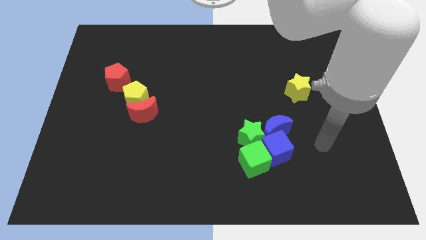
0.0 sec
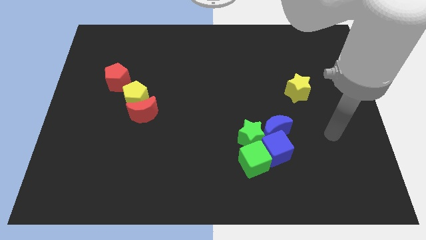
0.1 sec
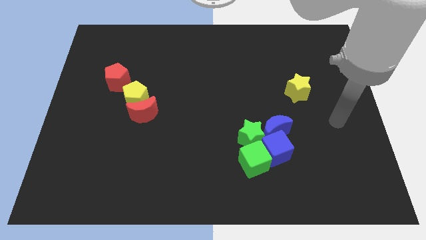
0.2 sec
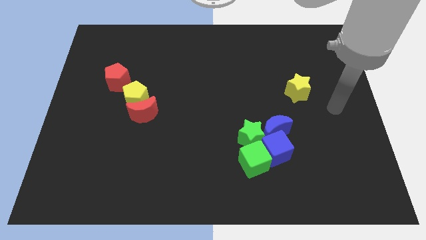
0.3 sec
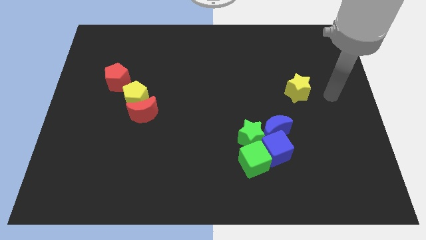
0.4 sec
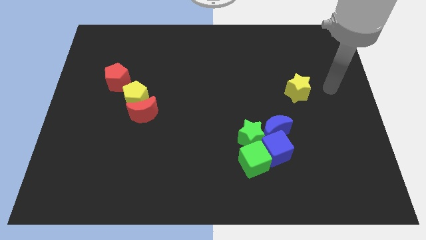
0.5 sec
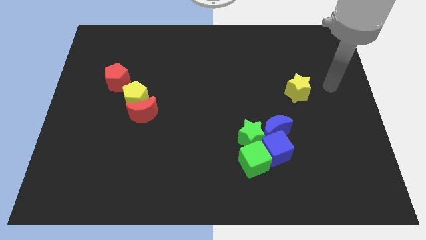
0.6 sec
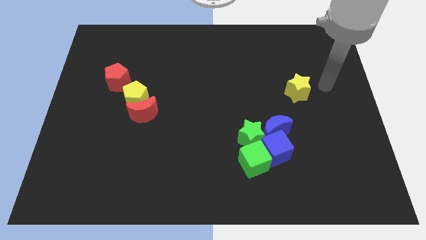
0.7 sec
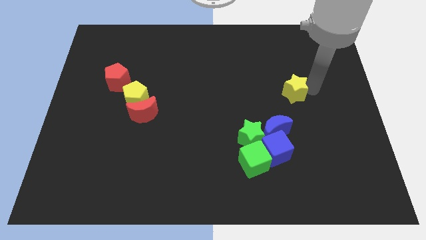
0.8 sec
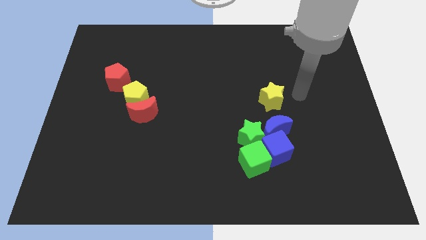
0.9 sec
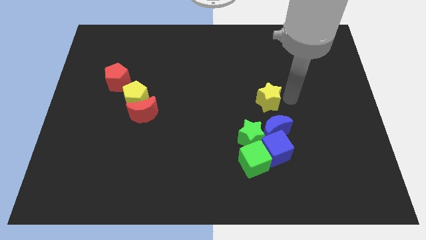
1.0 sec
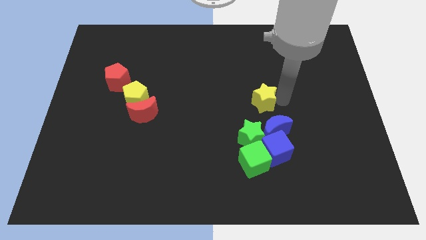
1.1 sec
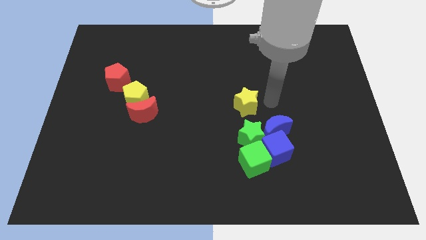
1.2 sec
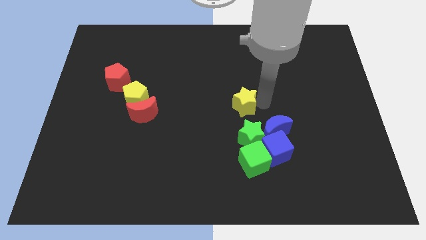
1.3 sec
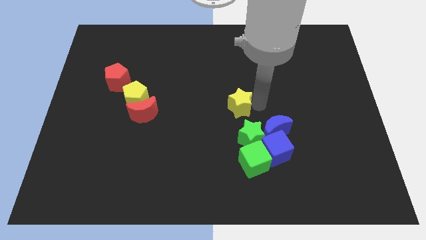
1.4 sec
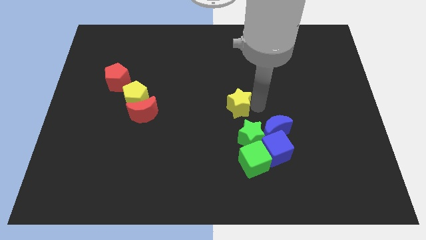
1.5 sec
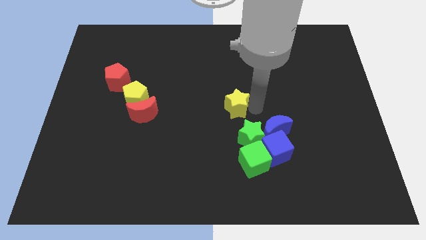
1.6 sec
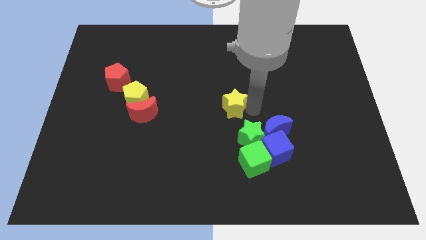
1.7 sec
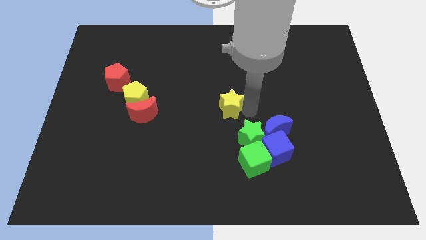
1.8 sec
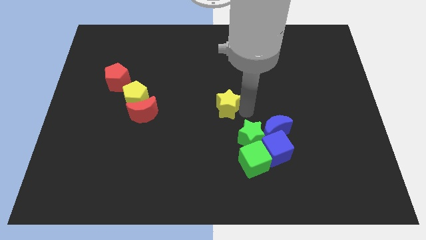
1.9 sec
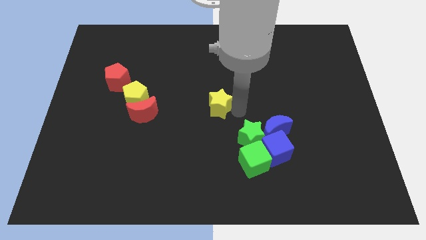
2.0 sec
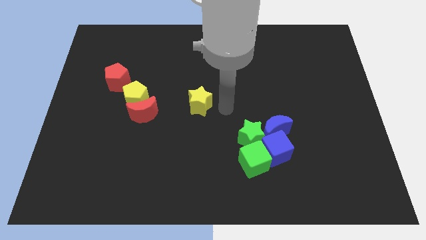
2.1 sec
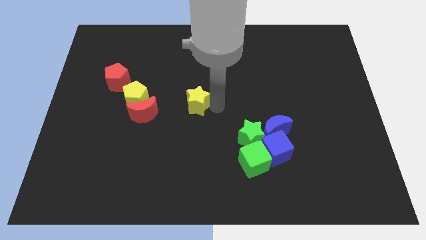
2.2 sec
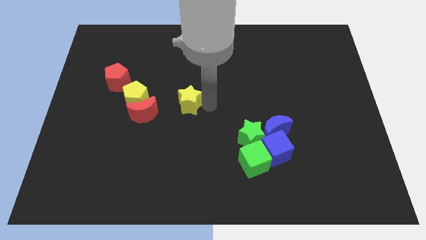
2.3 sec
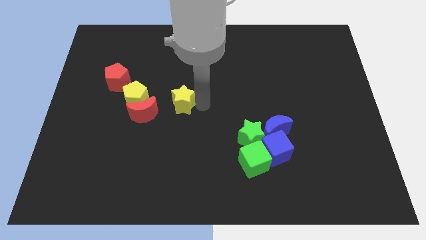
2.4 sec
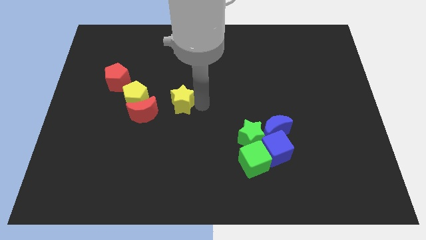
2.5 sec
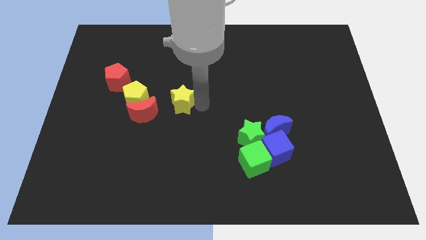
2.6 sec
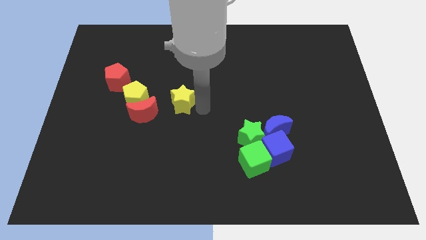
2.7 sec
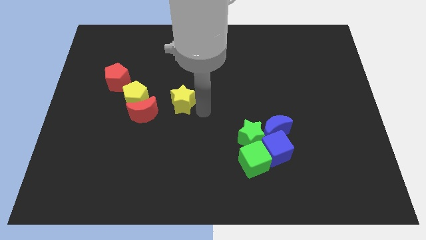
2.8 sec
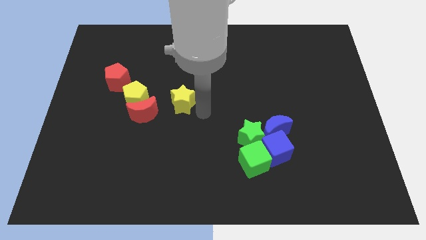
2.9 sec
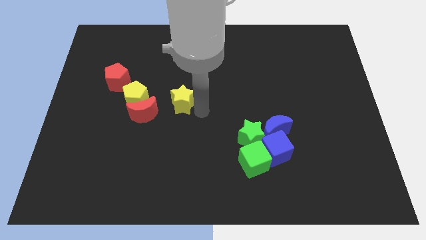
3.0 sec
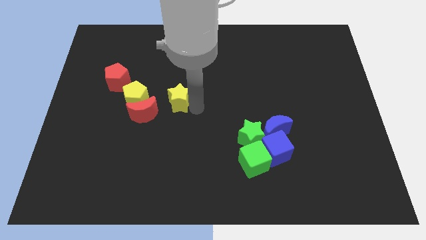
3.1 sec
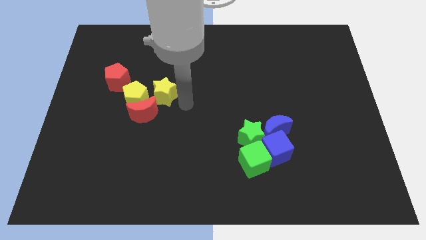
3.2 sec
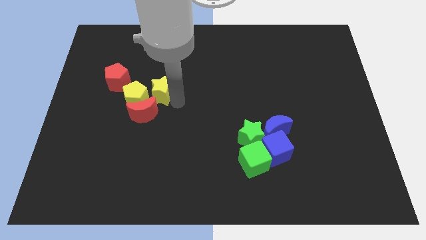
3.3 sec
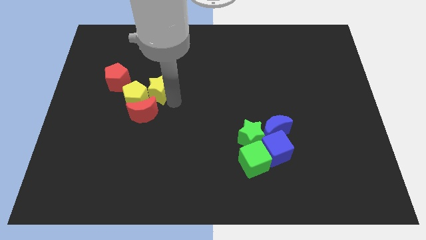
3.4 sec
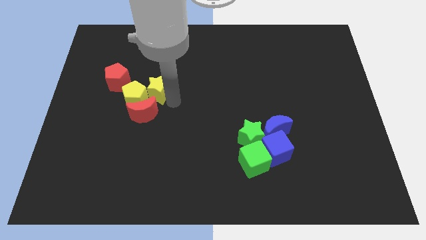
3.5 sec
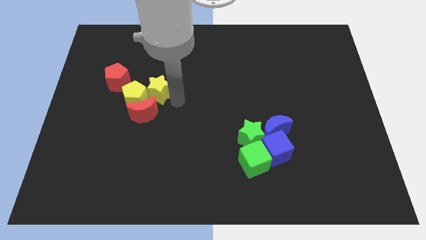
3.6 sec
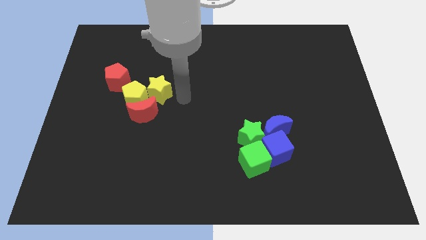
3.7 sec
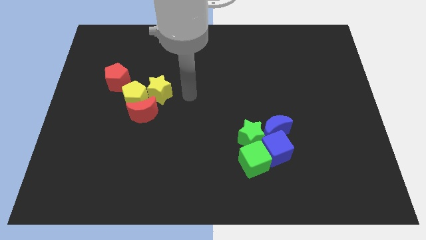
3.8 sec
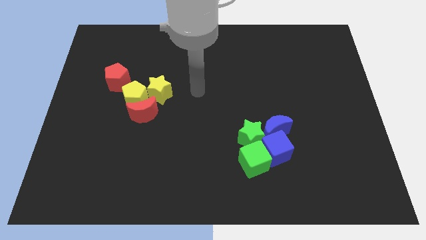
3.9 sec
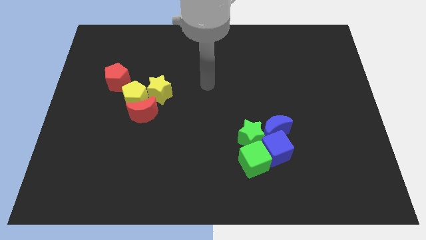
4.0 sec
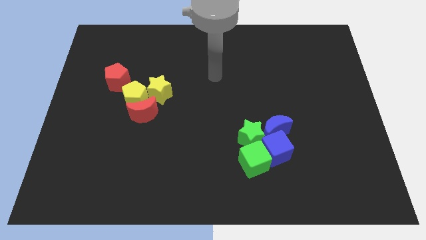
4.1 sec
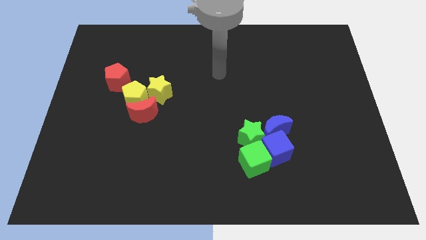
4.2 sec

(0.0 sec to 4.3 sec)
move yellow star into the right side of the yellow pentagon

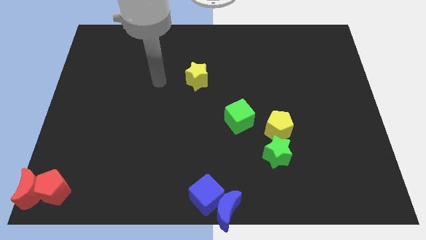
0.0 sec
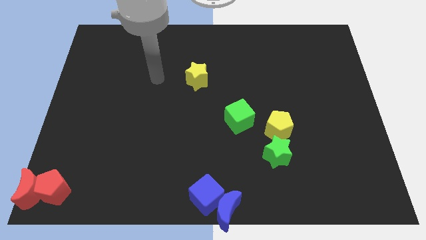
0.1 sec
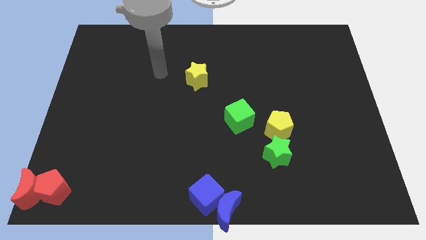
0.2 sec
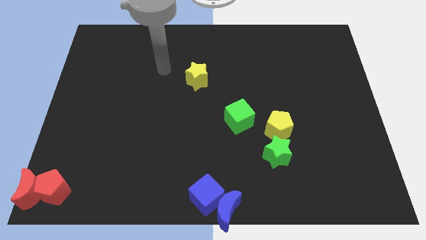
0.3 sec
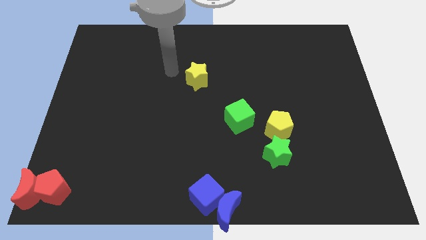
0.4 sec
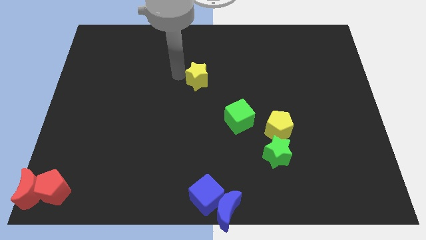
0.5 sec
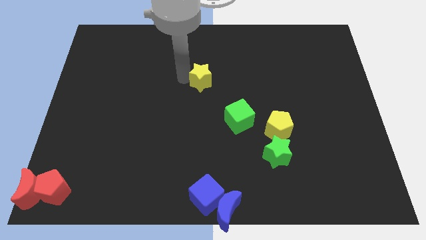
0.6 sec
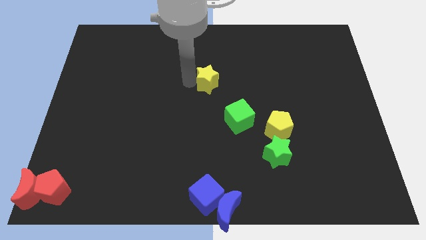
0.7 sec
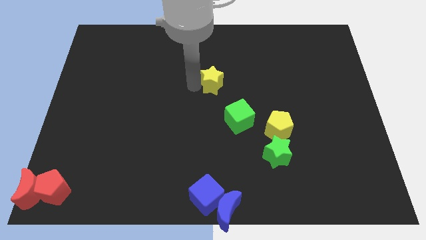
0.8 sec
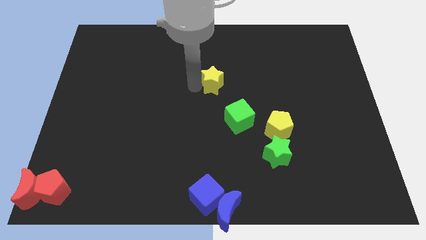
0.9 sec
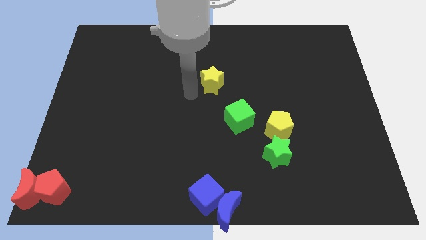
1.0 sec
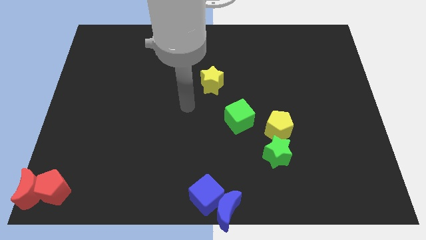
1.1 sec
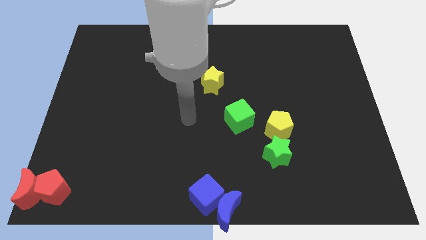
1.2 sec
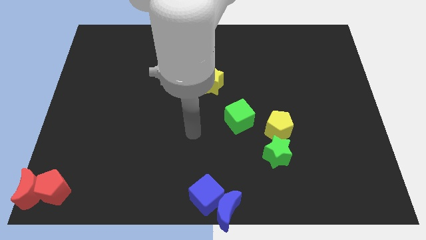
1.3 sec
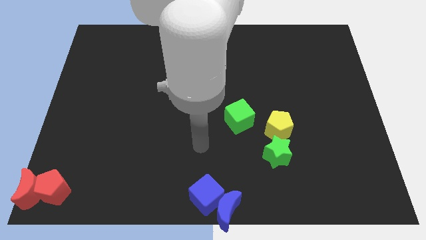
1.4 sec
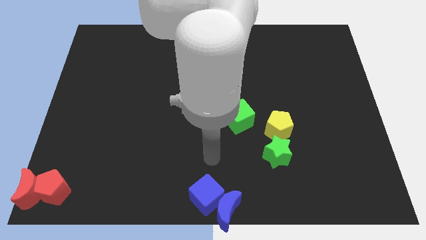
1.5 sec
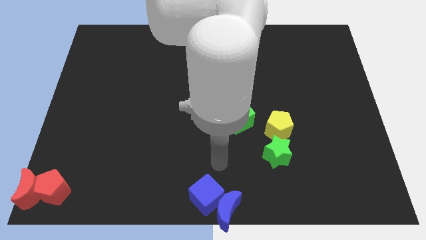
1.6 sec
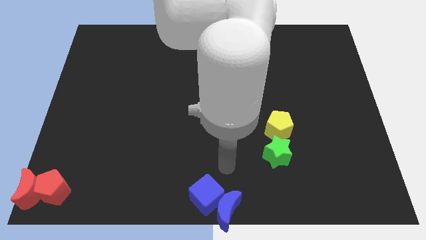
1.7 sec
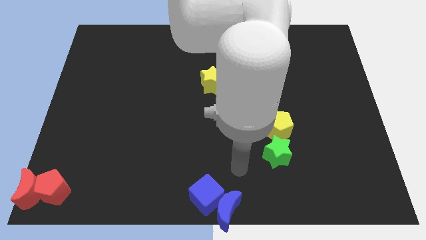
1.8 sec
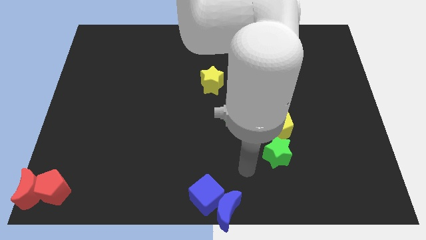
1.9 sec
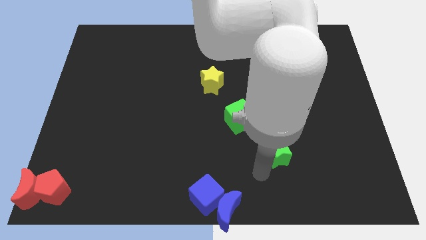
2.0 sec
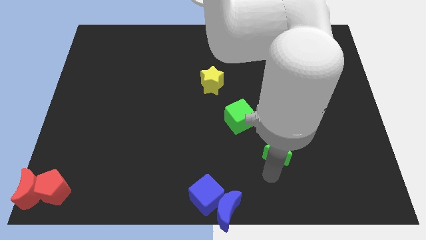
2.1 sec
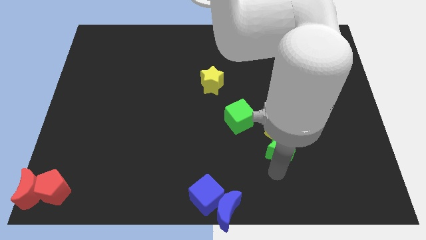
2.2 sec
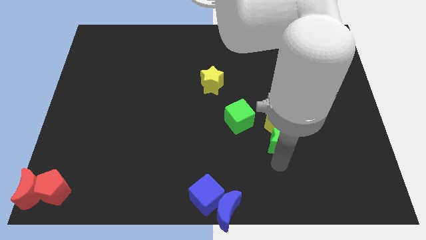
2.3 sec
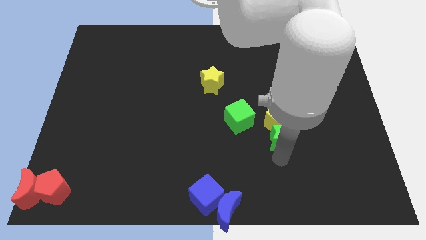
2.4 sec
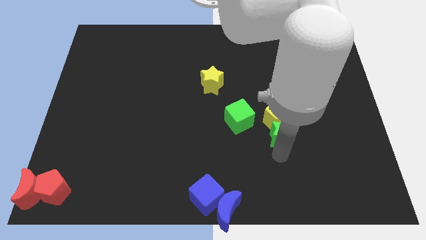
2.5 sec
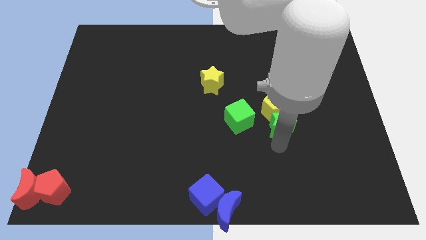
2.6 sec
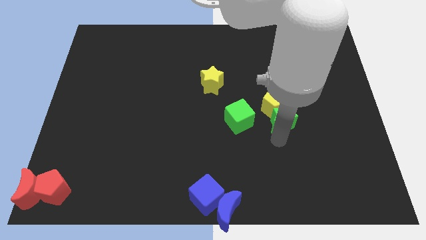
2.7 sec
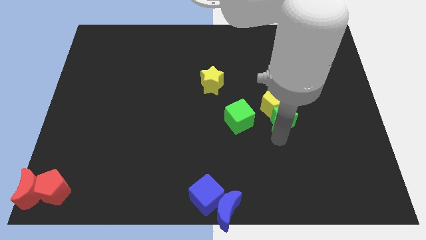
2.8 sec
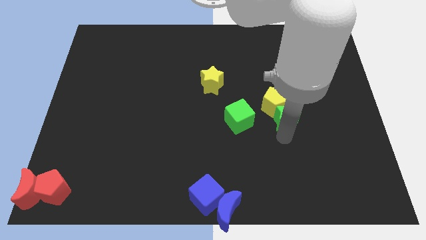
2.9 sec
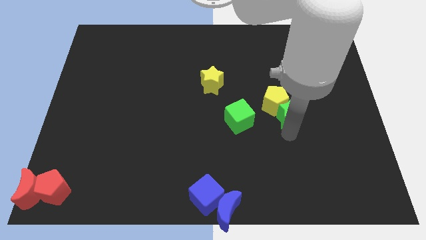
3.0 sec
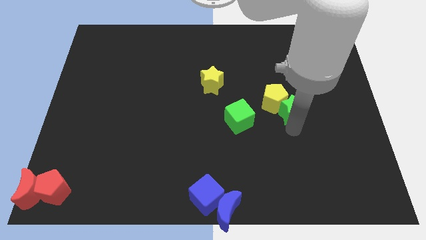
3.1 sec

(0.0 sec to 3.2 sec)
push the yellow pentagon and green star to the right of green cube

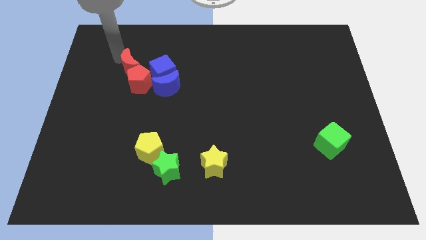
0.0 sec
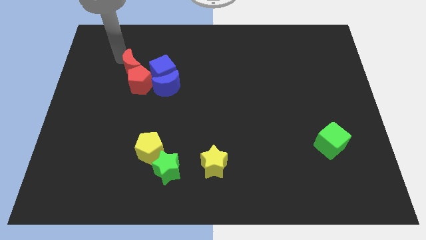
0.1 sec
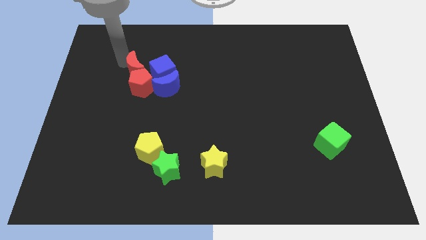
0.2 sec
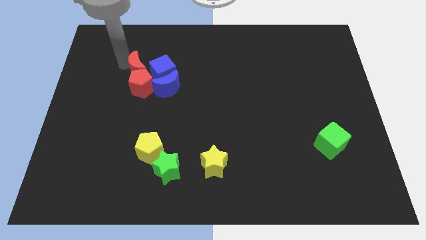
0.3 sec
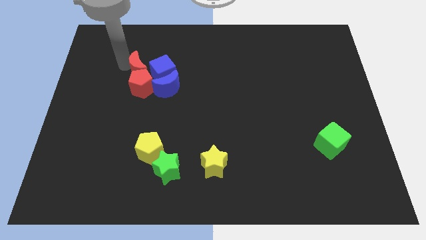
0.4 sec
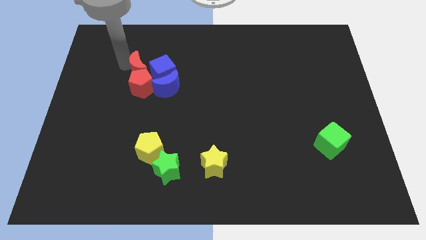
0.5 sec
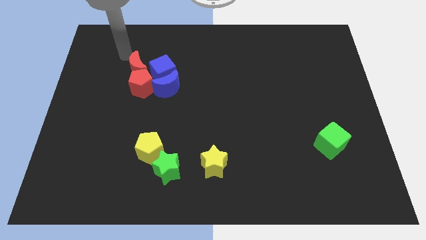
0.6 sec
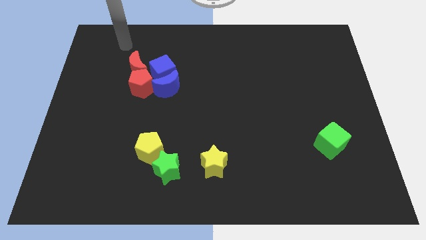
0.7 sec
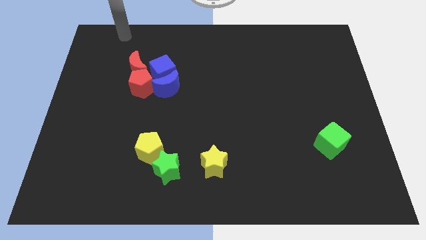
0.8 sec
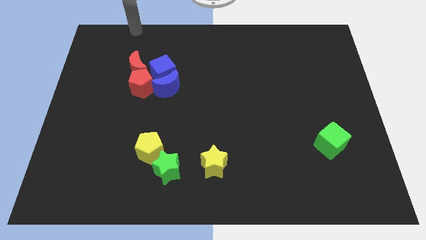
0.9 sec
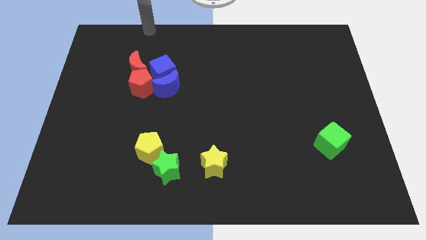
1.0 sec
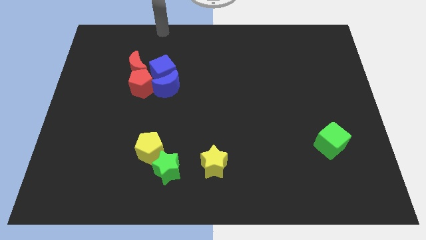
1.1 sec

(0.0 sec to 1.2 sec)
move your arm away from the red moon

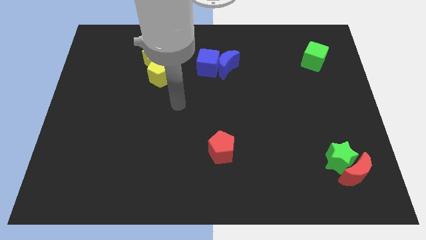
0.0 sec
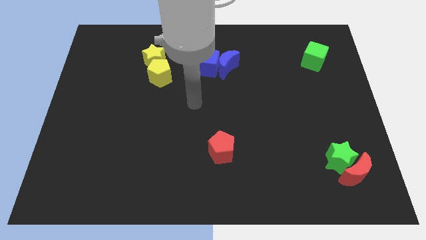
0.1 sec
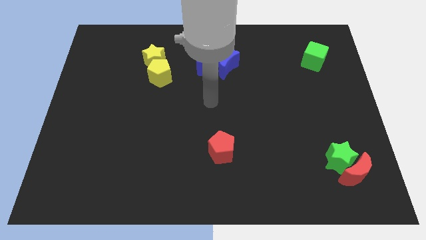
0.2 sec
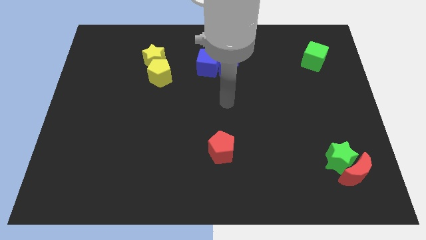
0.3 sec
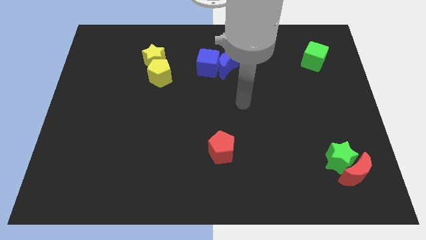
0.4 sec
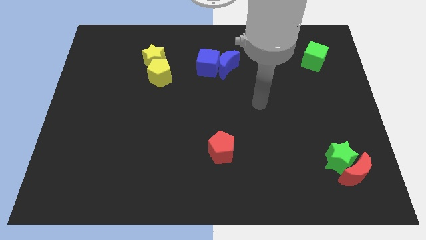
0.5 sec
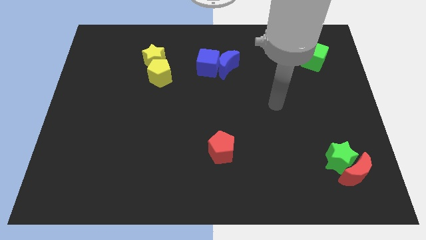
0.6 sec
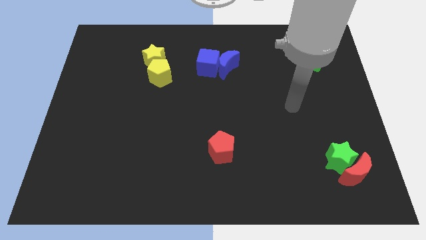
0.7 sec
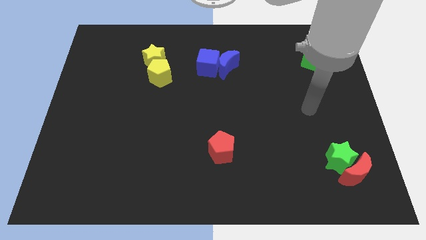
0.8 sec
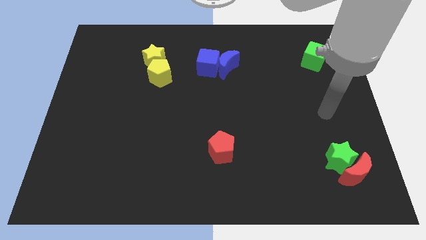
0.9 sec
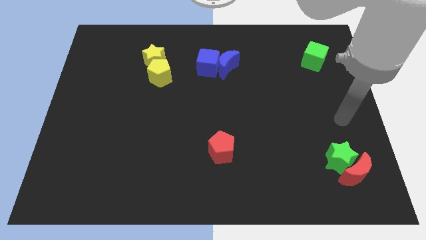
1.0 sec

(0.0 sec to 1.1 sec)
point your arm at the top of the green star
